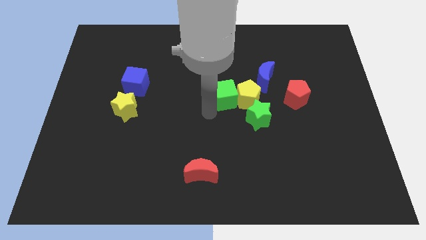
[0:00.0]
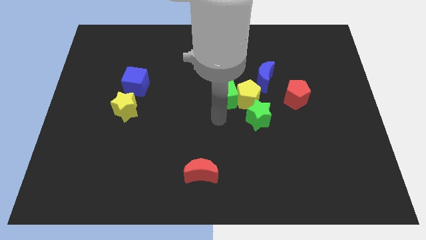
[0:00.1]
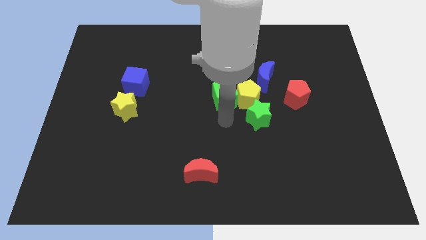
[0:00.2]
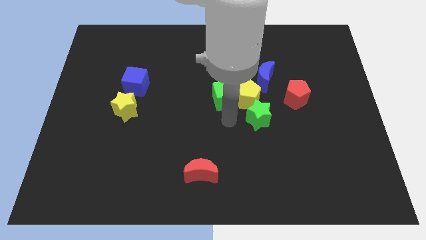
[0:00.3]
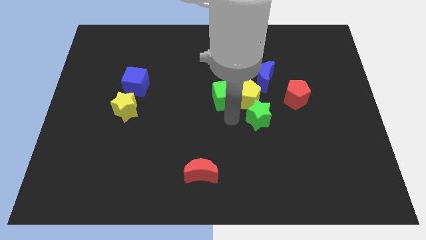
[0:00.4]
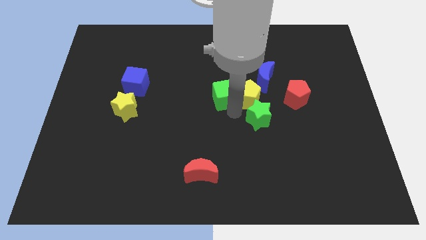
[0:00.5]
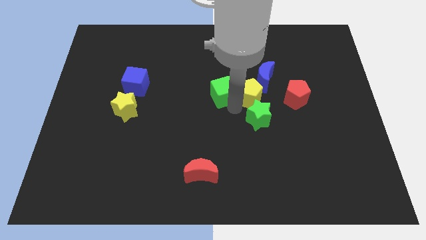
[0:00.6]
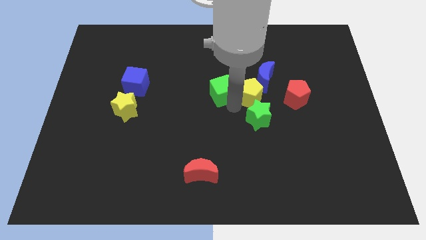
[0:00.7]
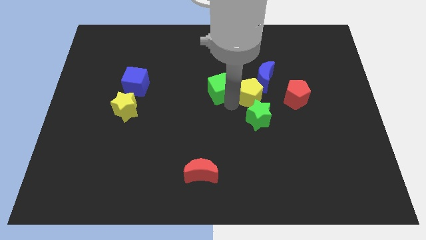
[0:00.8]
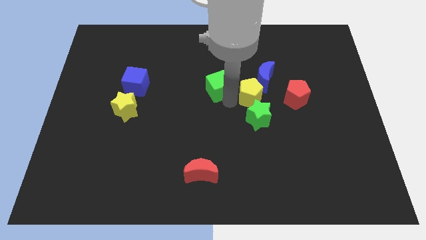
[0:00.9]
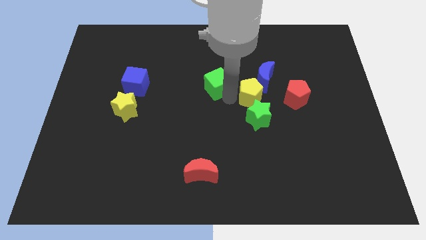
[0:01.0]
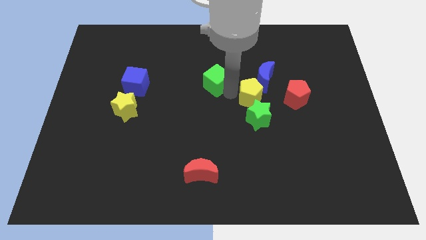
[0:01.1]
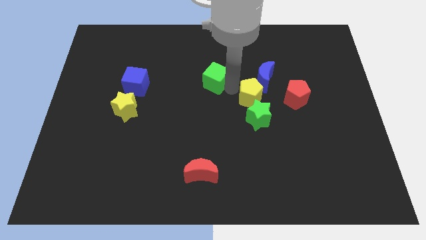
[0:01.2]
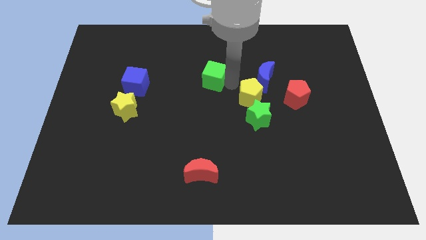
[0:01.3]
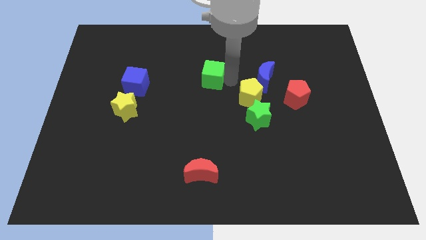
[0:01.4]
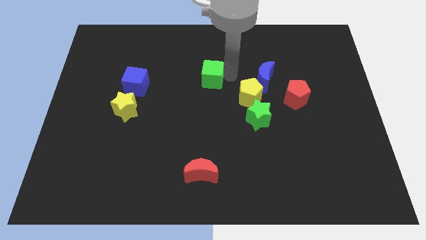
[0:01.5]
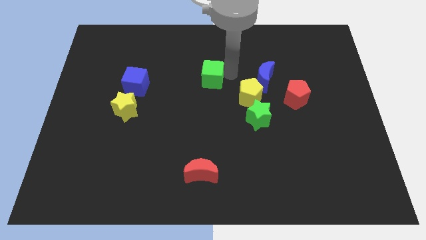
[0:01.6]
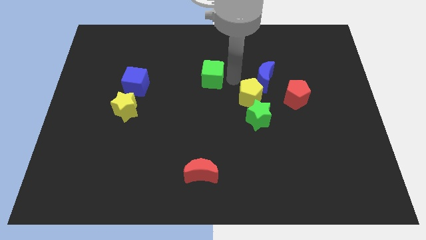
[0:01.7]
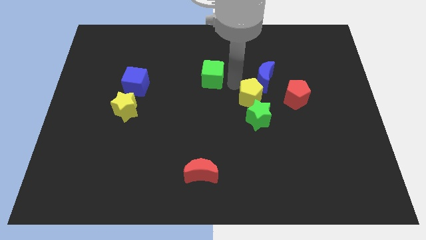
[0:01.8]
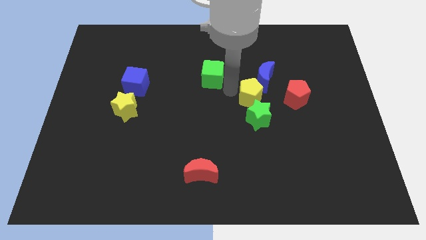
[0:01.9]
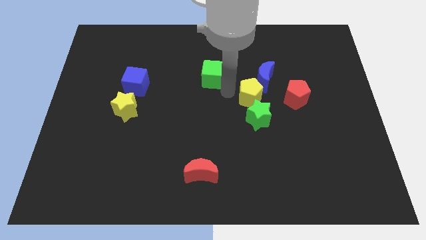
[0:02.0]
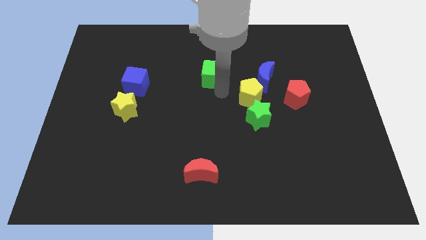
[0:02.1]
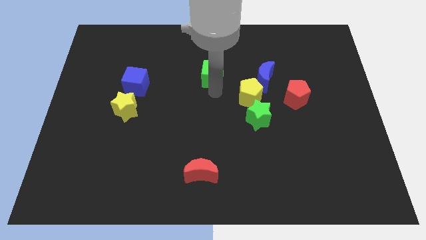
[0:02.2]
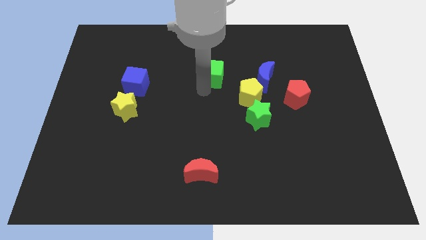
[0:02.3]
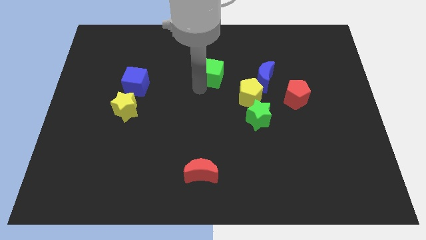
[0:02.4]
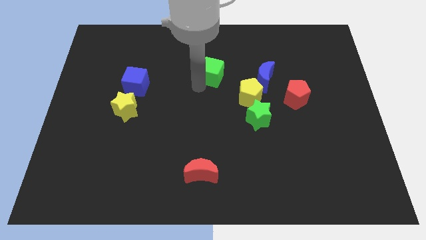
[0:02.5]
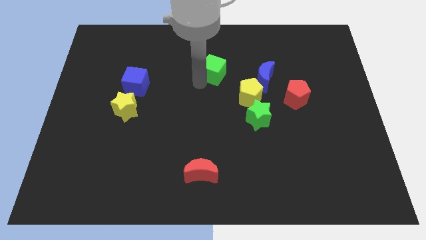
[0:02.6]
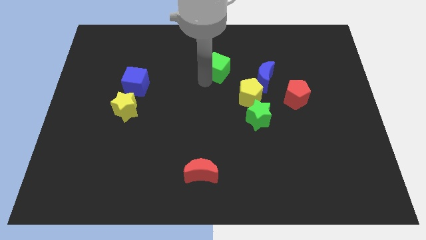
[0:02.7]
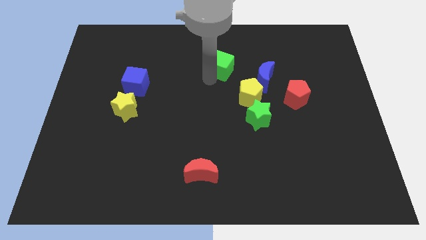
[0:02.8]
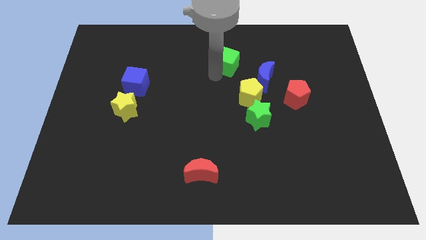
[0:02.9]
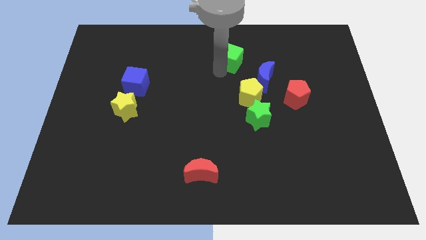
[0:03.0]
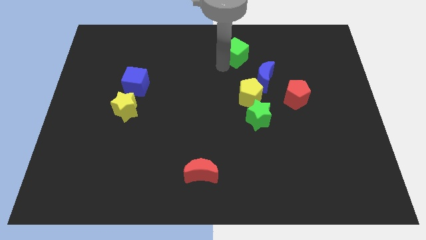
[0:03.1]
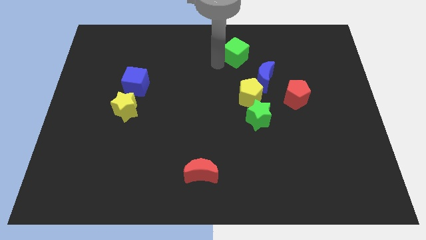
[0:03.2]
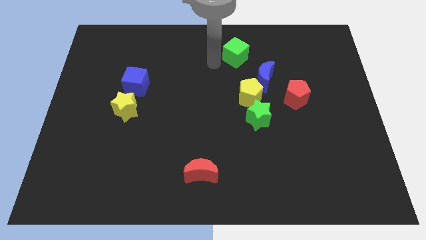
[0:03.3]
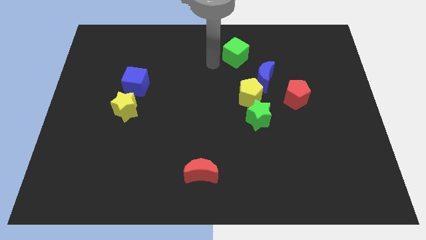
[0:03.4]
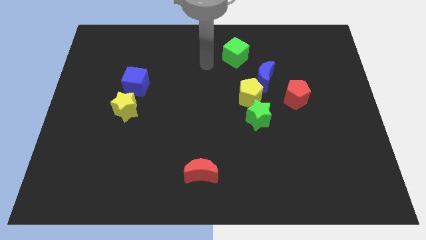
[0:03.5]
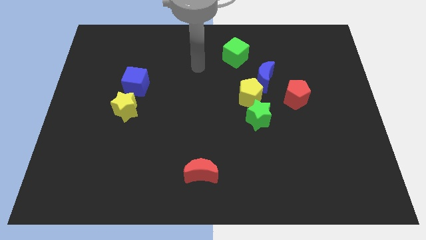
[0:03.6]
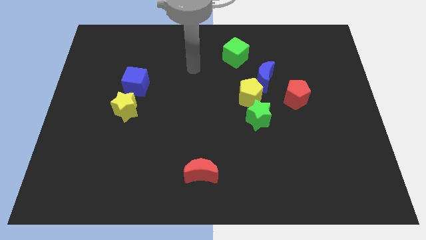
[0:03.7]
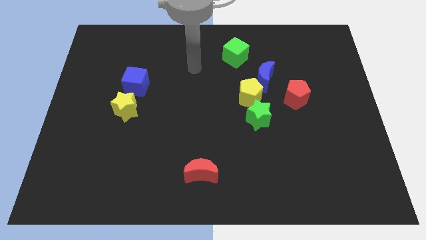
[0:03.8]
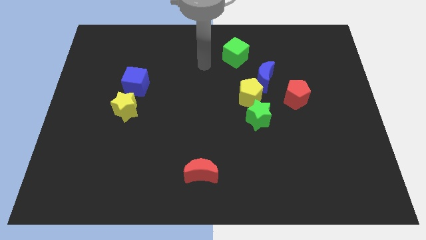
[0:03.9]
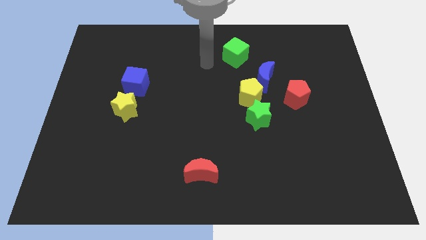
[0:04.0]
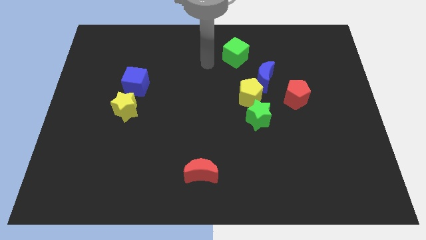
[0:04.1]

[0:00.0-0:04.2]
separate green cube from yellow pentagon

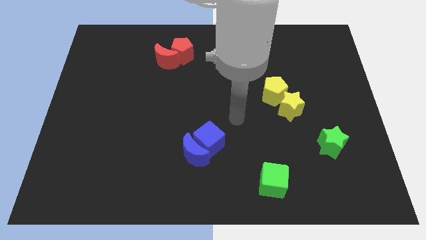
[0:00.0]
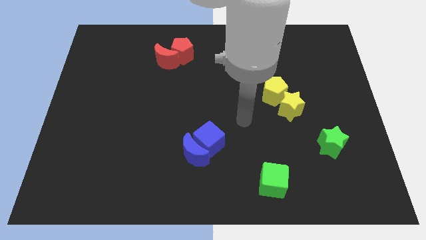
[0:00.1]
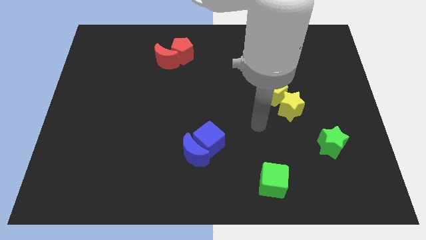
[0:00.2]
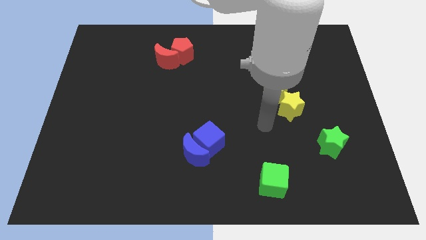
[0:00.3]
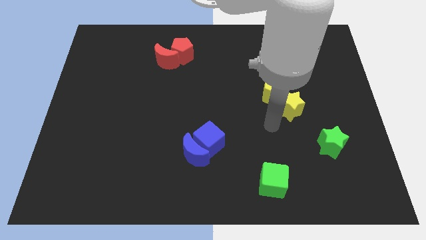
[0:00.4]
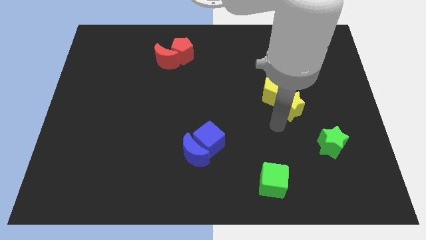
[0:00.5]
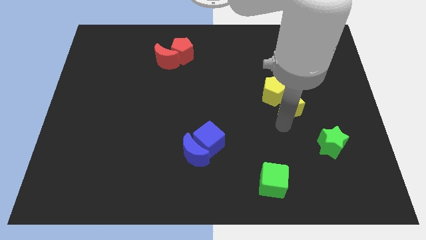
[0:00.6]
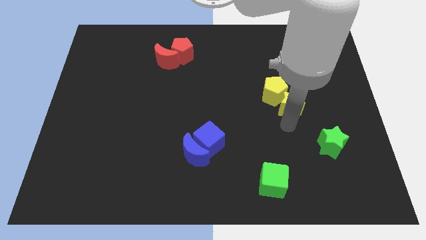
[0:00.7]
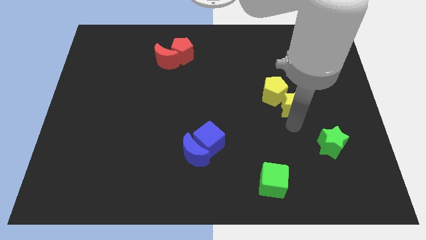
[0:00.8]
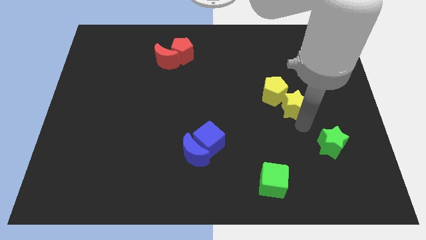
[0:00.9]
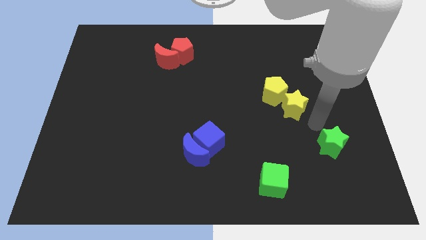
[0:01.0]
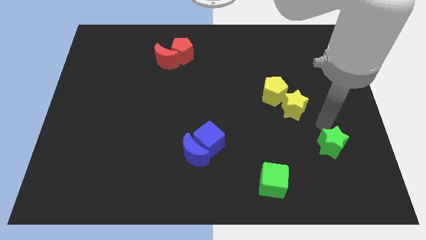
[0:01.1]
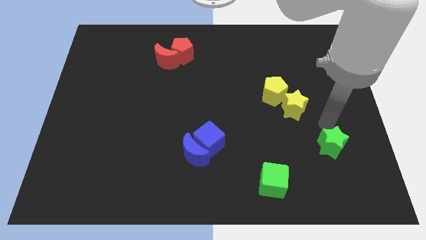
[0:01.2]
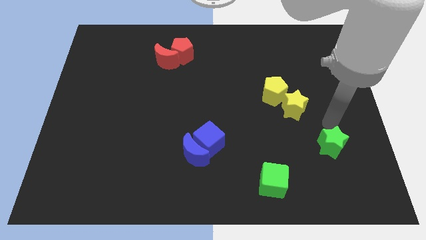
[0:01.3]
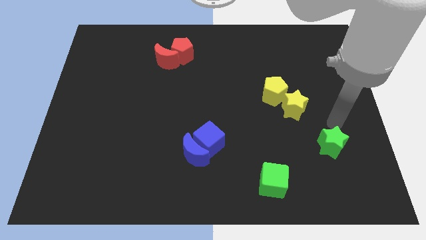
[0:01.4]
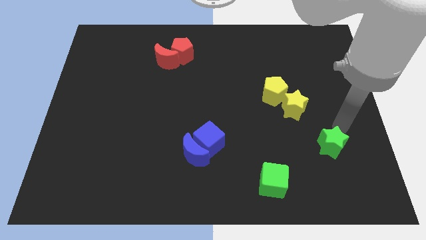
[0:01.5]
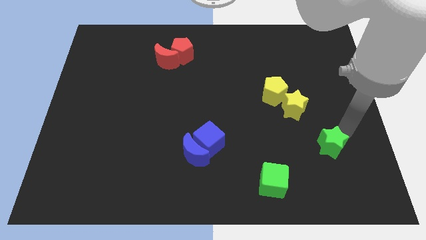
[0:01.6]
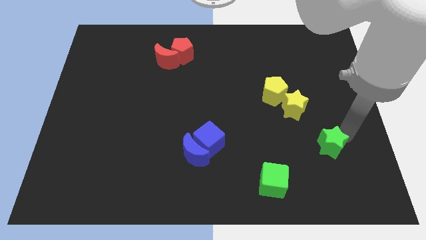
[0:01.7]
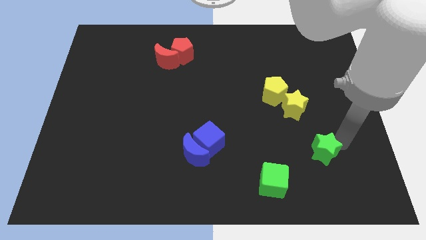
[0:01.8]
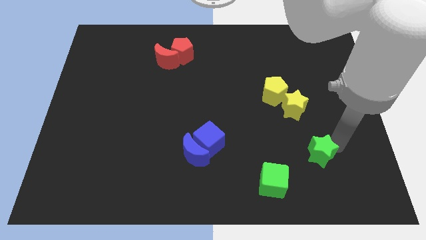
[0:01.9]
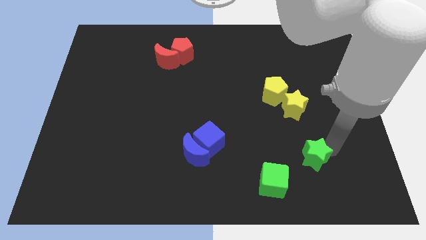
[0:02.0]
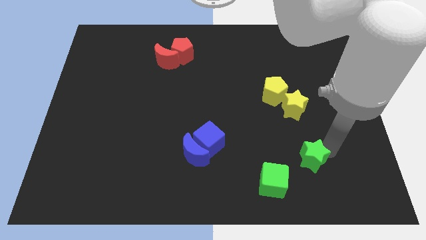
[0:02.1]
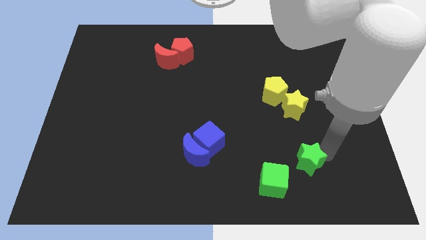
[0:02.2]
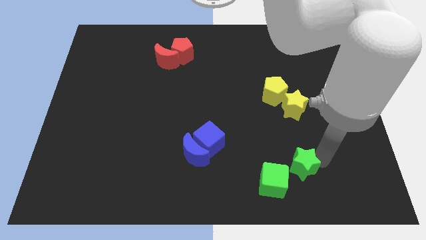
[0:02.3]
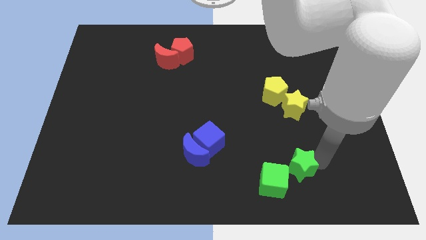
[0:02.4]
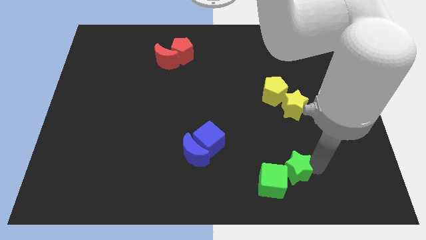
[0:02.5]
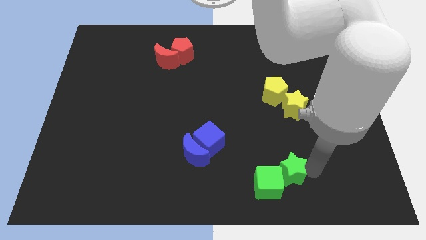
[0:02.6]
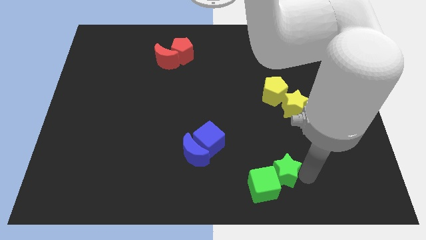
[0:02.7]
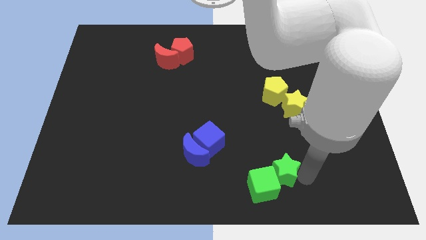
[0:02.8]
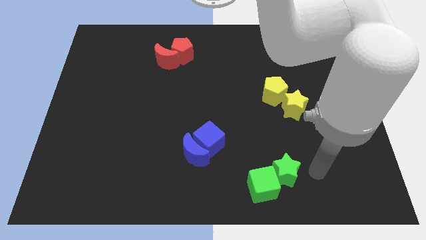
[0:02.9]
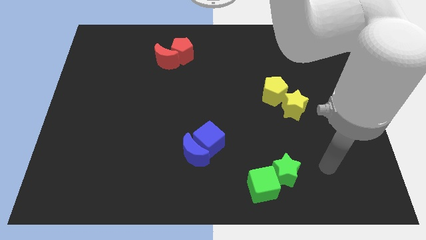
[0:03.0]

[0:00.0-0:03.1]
push green star into the green cube

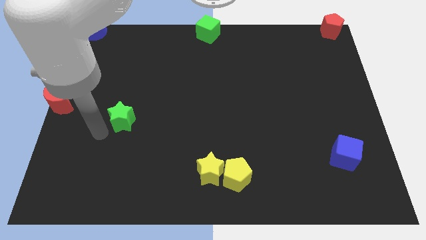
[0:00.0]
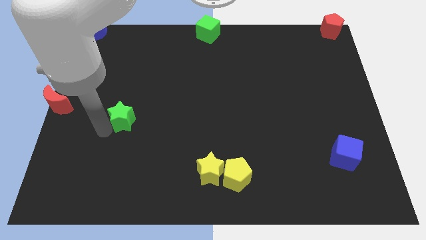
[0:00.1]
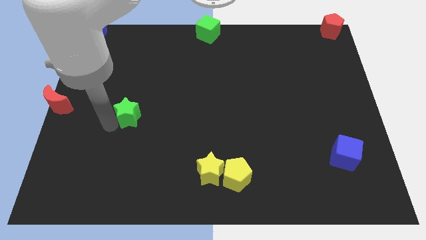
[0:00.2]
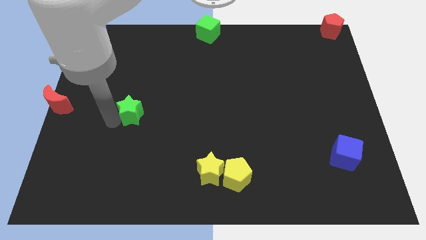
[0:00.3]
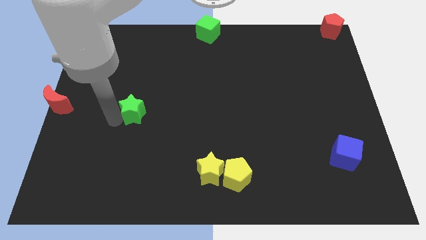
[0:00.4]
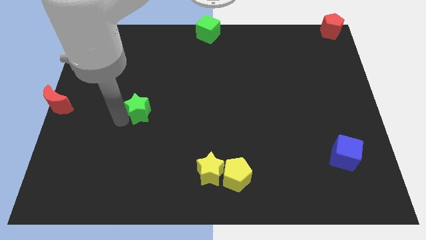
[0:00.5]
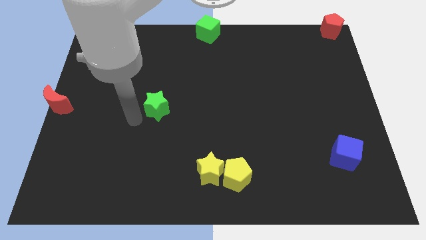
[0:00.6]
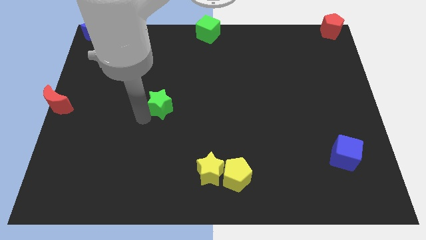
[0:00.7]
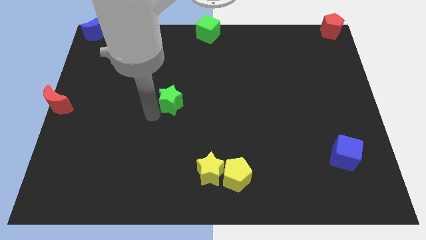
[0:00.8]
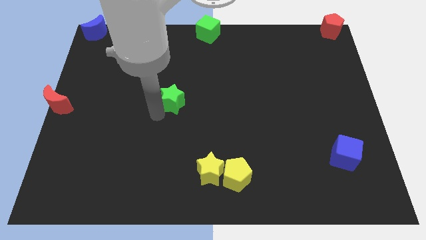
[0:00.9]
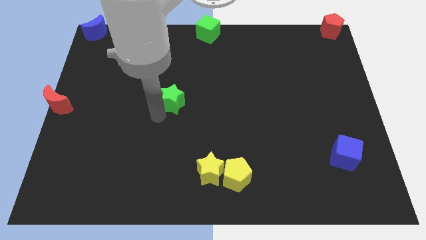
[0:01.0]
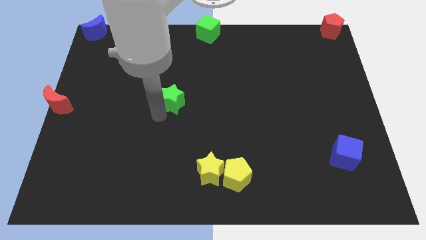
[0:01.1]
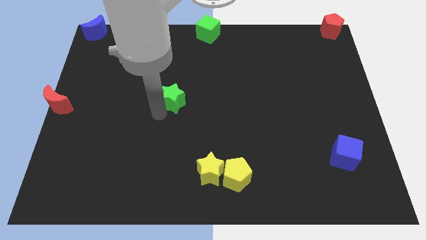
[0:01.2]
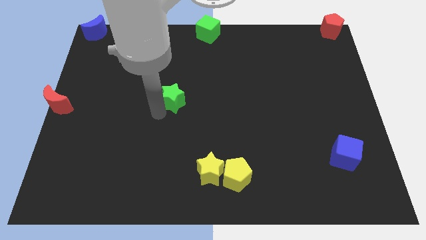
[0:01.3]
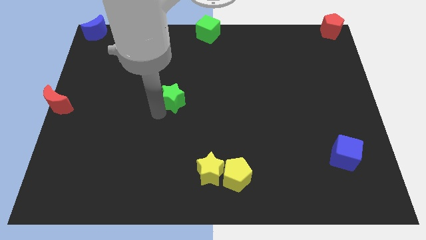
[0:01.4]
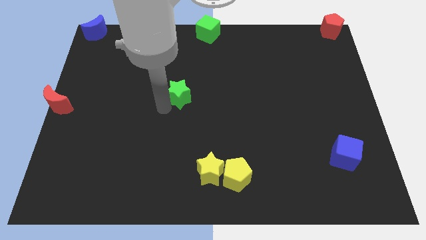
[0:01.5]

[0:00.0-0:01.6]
move the green star towards the top right
